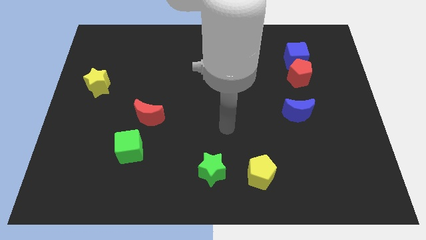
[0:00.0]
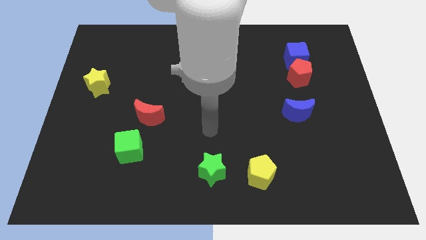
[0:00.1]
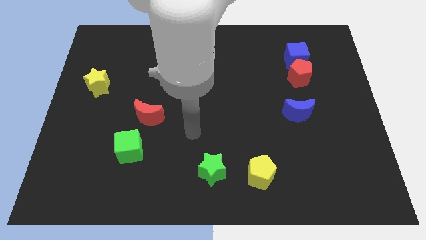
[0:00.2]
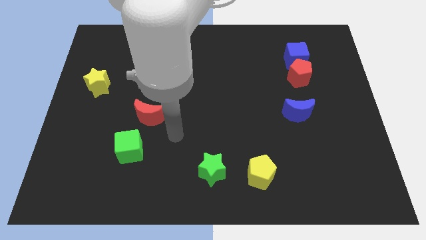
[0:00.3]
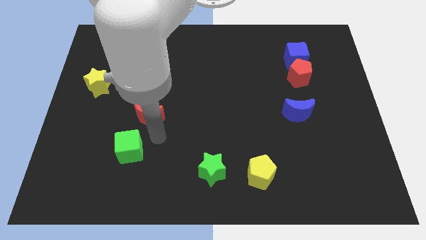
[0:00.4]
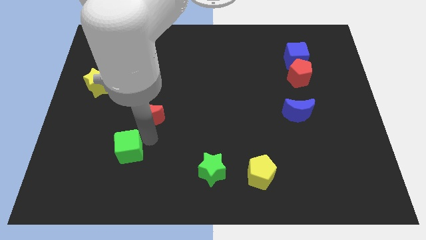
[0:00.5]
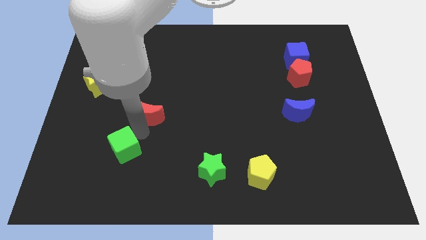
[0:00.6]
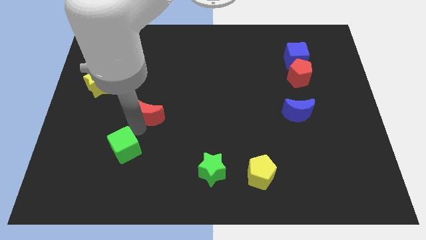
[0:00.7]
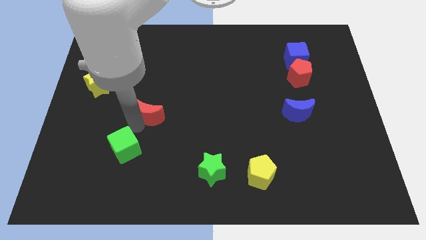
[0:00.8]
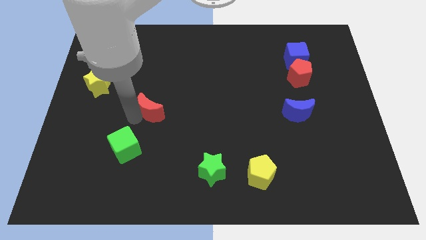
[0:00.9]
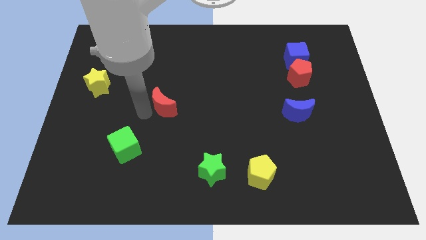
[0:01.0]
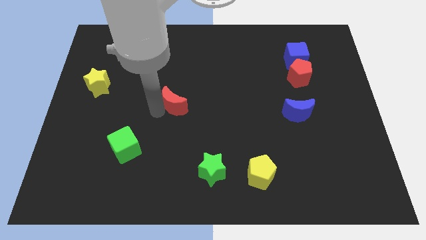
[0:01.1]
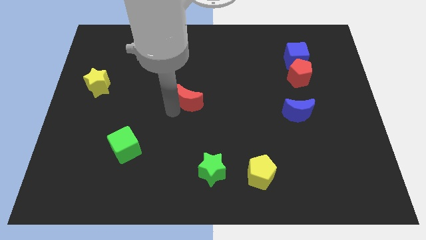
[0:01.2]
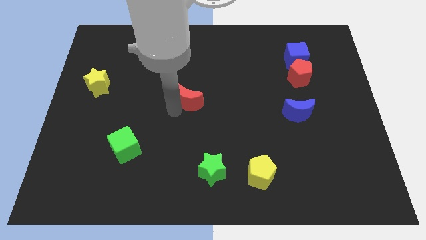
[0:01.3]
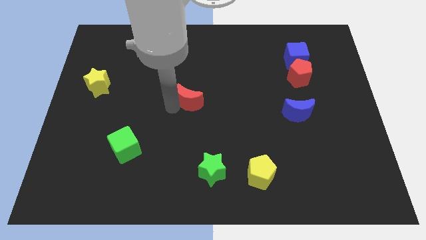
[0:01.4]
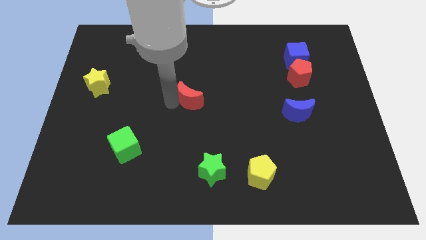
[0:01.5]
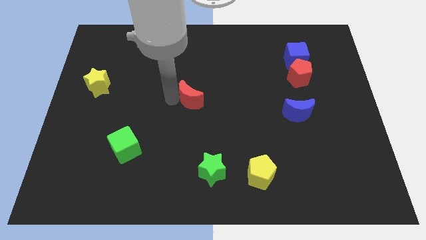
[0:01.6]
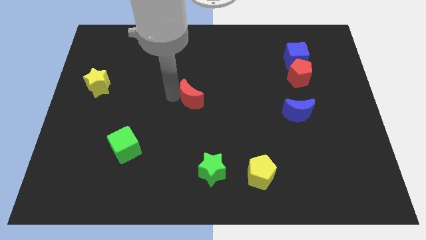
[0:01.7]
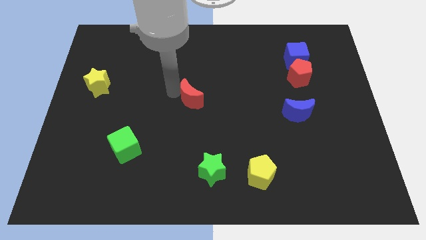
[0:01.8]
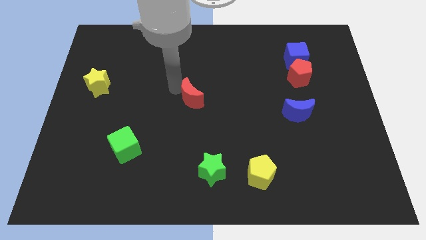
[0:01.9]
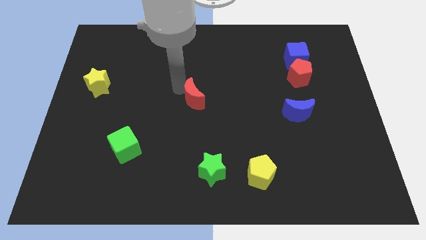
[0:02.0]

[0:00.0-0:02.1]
drag red moon towards middle of the board

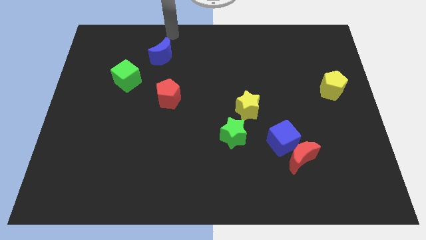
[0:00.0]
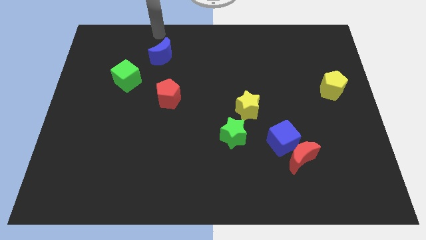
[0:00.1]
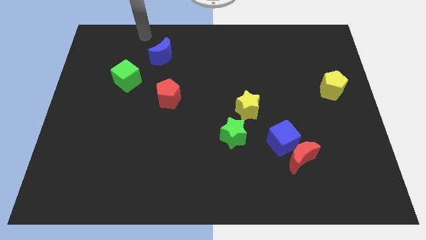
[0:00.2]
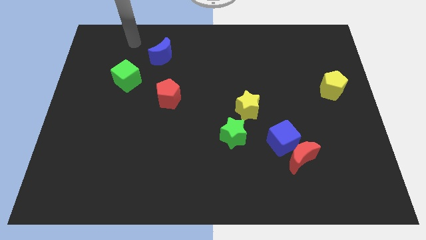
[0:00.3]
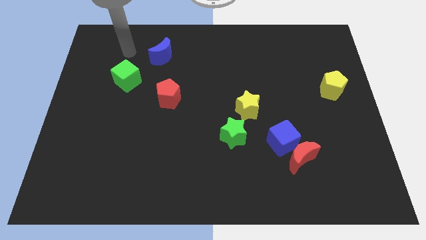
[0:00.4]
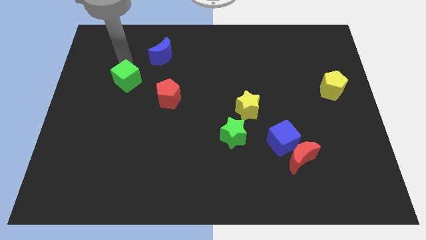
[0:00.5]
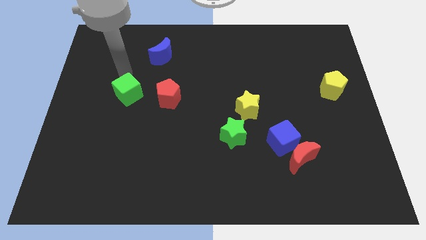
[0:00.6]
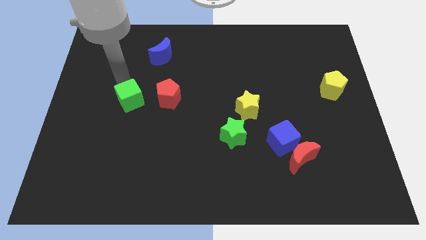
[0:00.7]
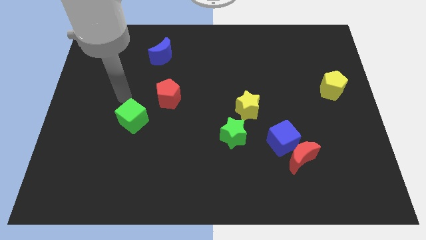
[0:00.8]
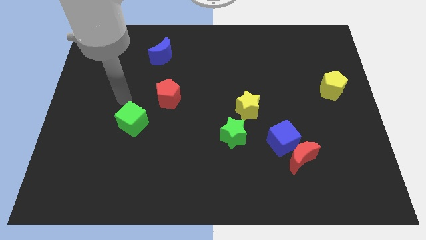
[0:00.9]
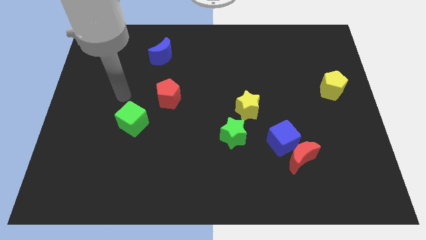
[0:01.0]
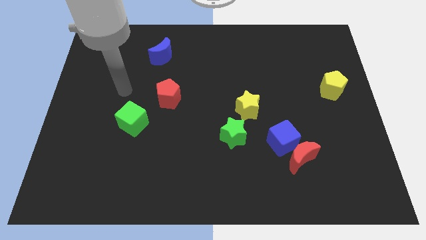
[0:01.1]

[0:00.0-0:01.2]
slightly move the green cube down

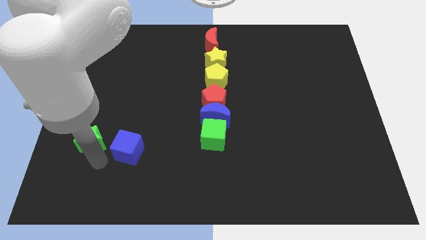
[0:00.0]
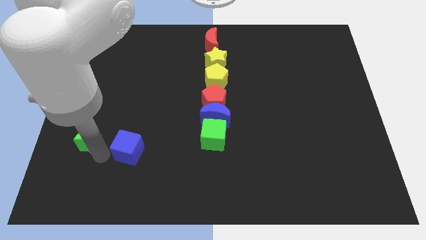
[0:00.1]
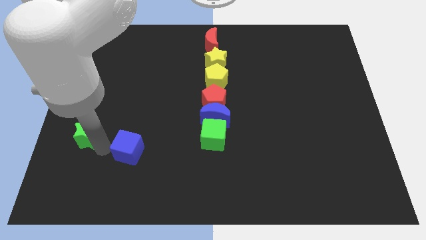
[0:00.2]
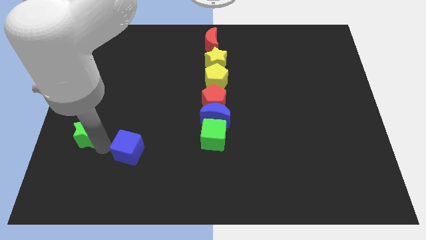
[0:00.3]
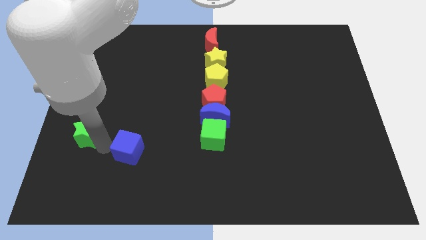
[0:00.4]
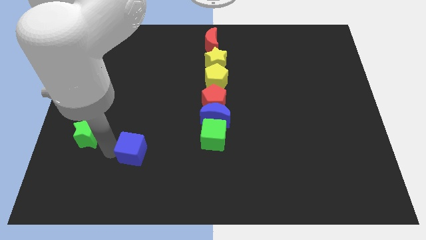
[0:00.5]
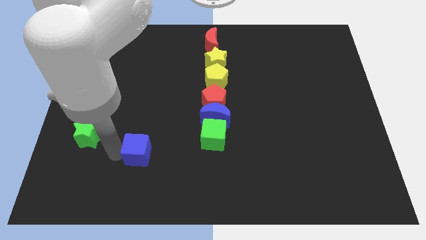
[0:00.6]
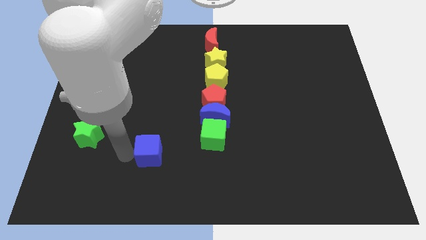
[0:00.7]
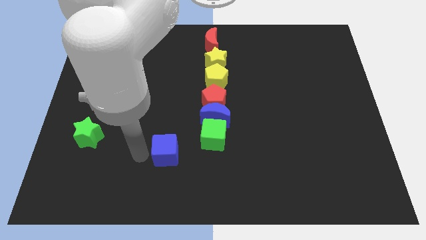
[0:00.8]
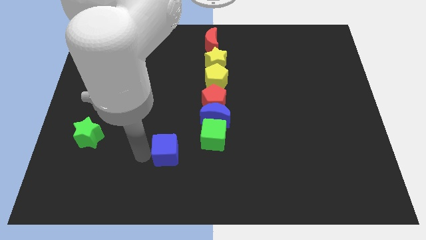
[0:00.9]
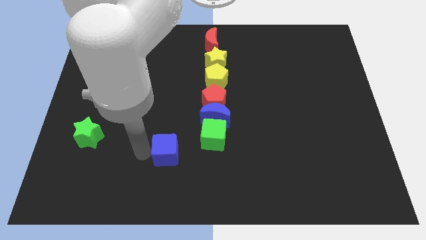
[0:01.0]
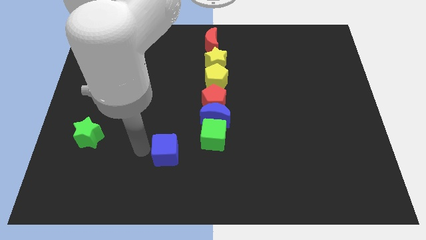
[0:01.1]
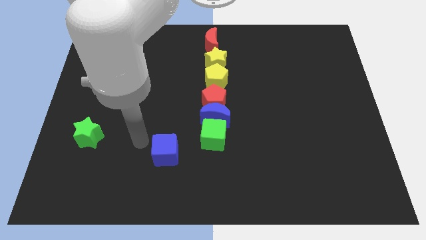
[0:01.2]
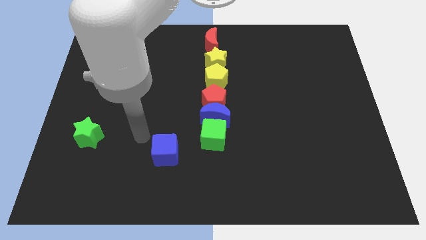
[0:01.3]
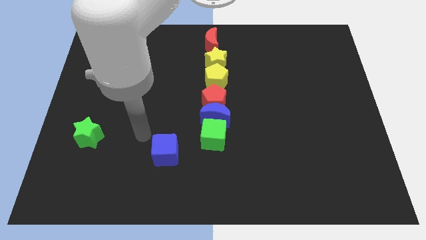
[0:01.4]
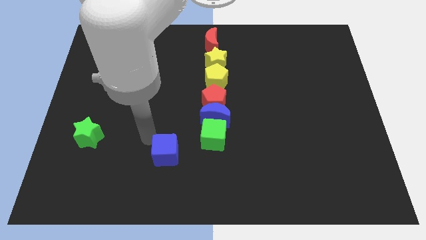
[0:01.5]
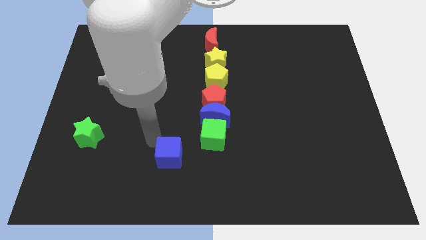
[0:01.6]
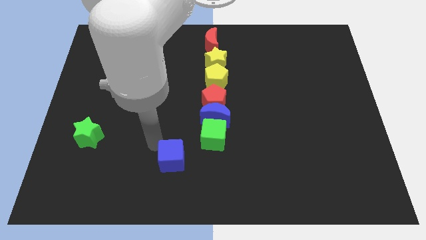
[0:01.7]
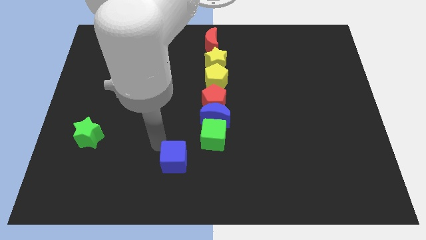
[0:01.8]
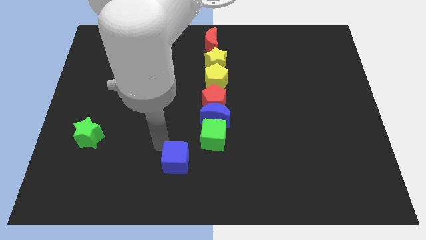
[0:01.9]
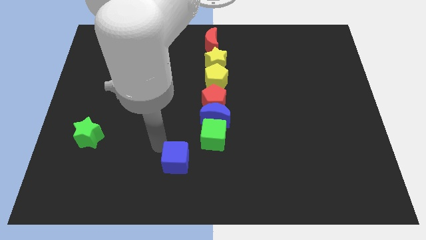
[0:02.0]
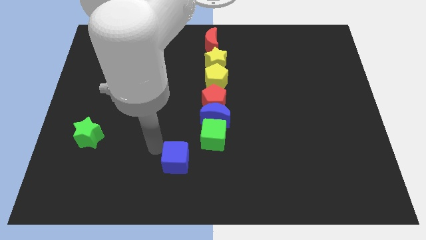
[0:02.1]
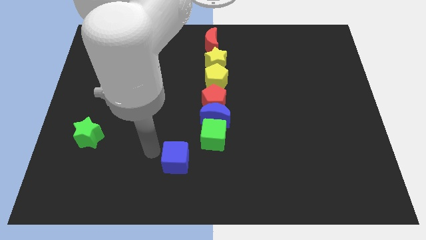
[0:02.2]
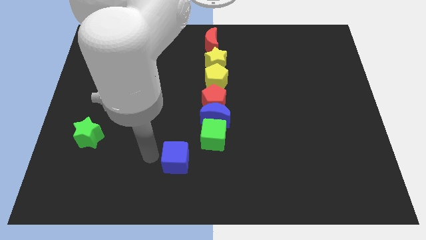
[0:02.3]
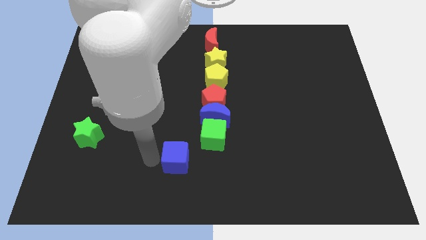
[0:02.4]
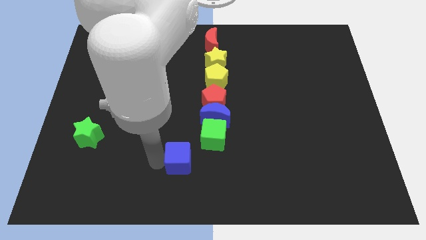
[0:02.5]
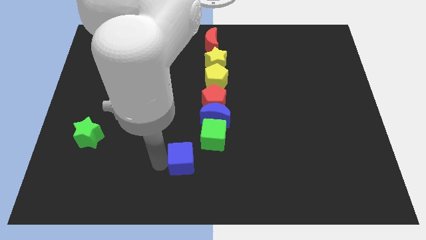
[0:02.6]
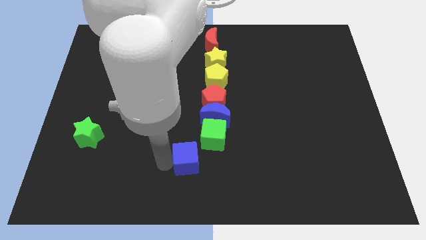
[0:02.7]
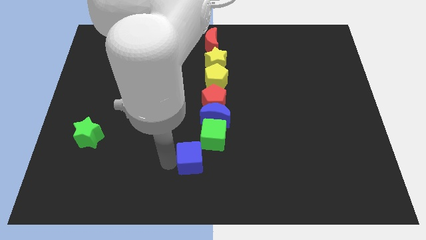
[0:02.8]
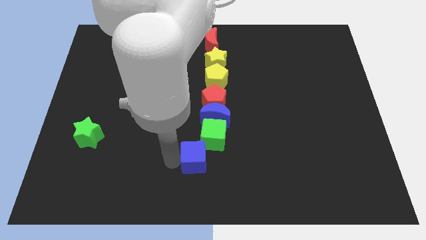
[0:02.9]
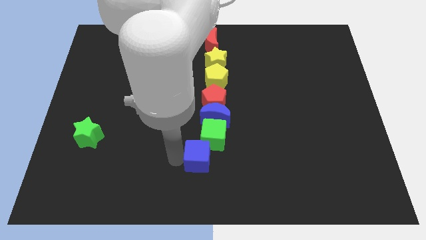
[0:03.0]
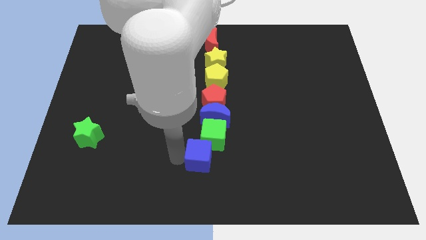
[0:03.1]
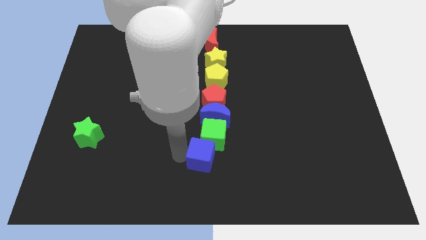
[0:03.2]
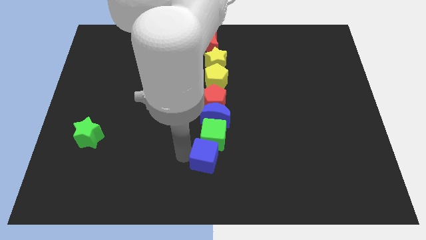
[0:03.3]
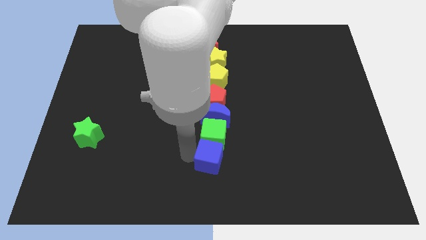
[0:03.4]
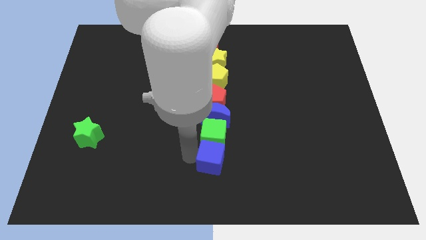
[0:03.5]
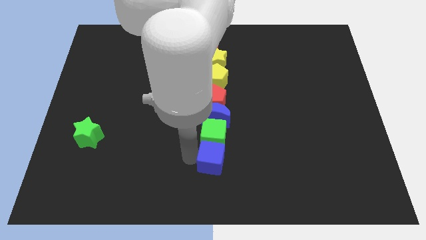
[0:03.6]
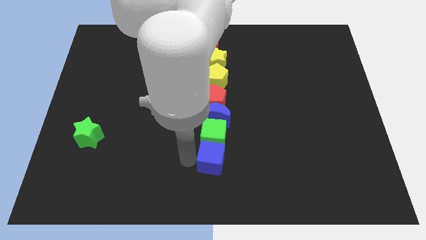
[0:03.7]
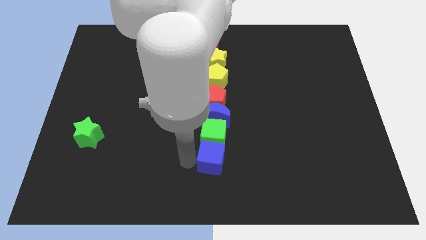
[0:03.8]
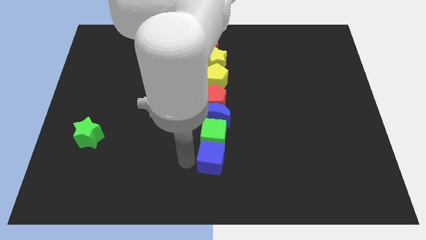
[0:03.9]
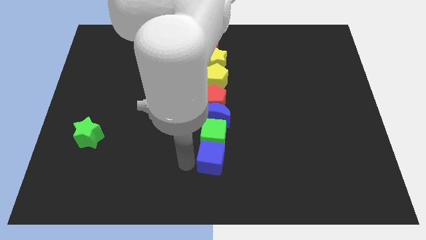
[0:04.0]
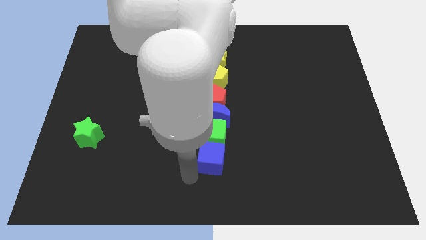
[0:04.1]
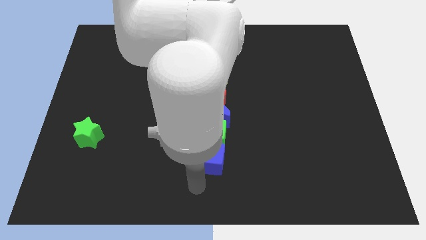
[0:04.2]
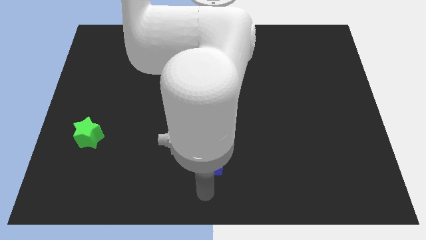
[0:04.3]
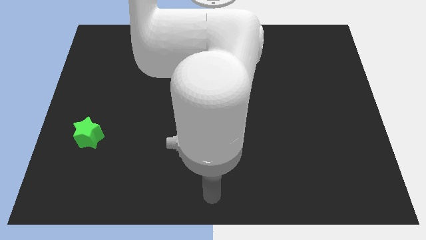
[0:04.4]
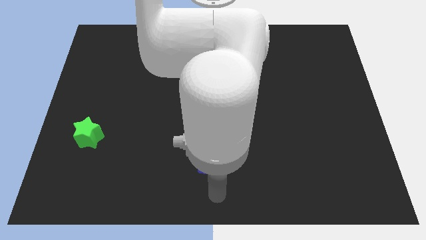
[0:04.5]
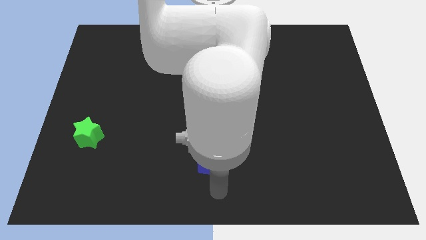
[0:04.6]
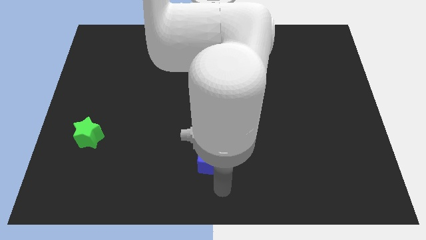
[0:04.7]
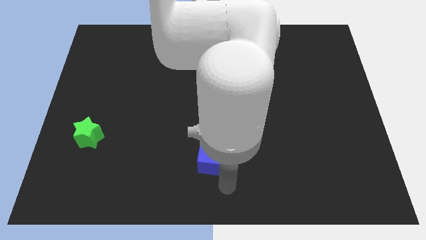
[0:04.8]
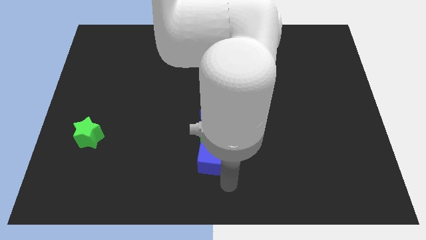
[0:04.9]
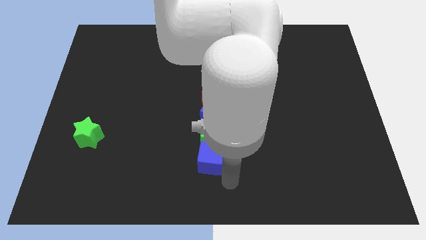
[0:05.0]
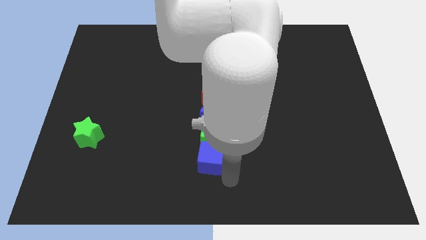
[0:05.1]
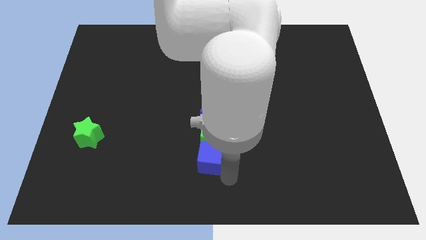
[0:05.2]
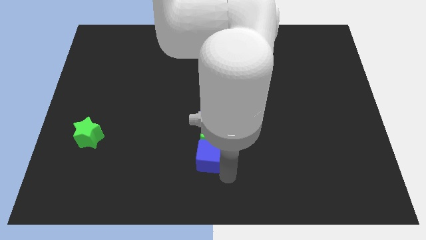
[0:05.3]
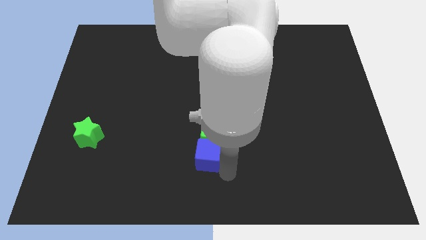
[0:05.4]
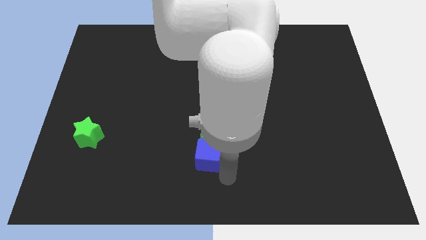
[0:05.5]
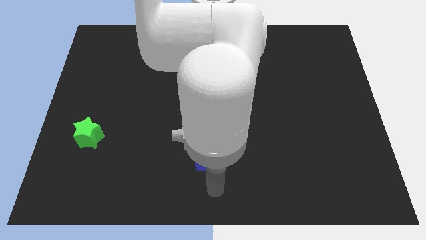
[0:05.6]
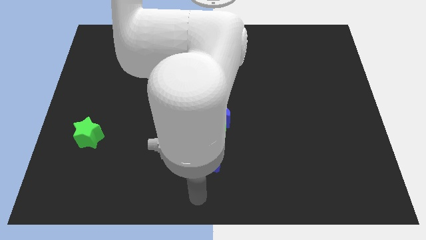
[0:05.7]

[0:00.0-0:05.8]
push the blue cube to the bottom side of the green cube
